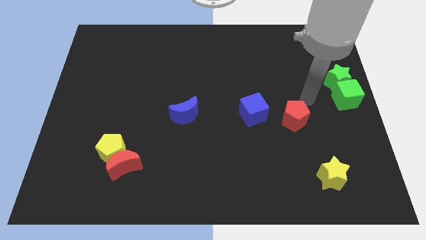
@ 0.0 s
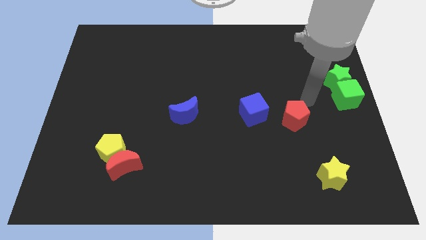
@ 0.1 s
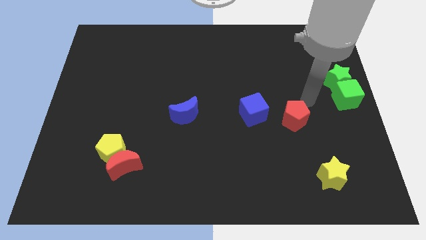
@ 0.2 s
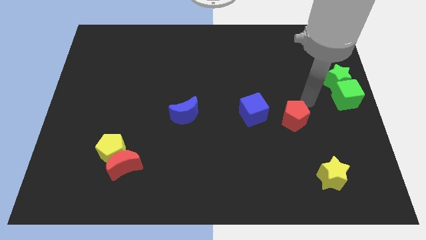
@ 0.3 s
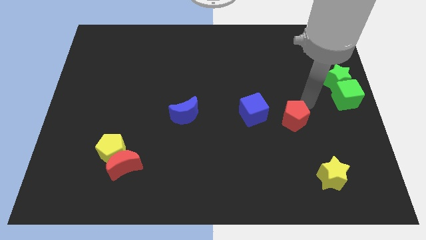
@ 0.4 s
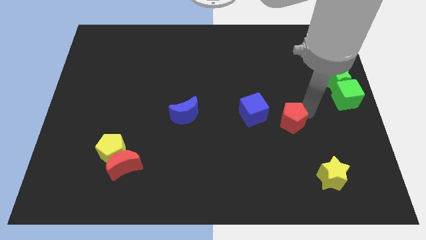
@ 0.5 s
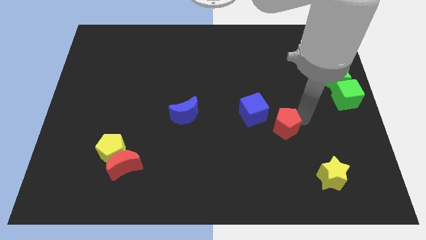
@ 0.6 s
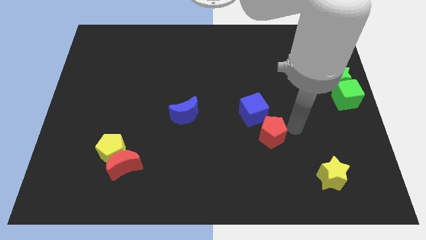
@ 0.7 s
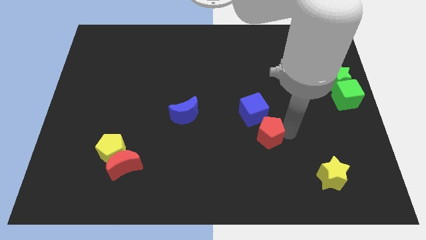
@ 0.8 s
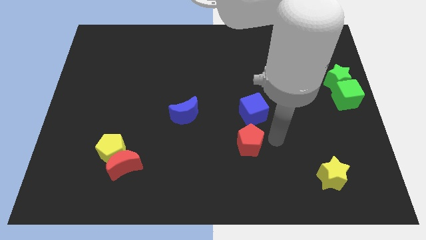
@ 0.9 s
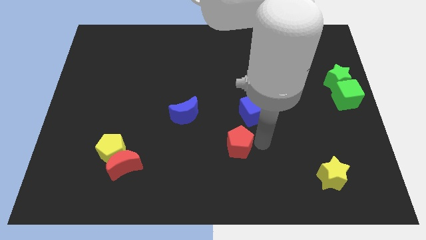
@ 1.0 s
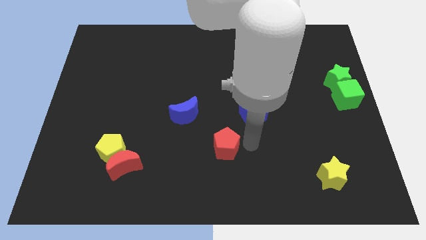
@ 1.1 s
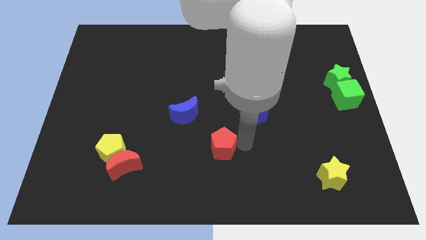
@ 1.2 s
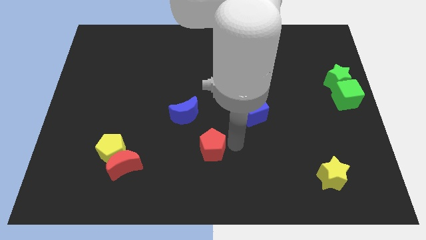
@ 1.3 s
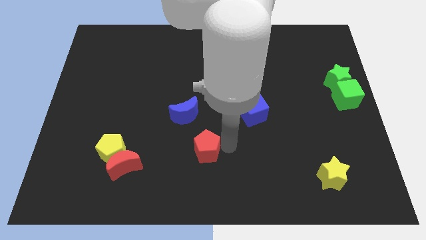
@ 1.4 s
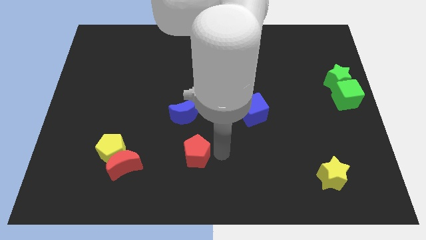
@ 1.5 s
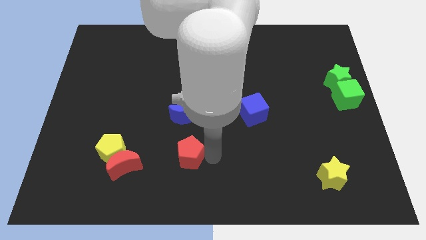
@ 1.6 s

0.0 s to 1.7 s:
move the red pentagon vertical to the blue moon

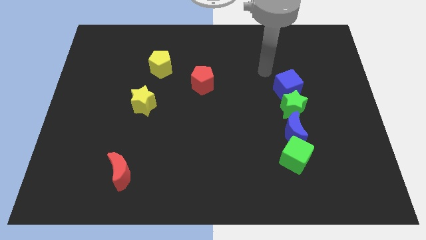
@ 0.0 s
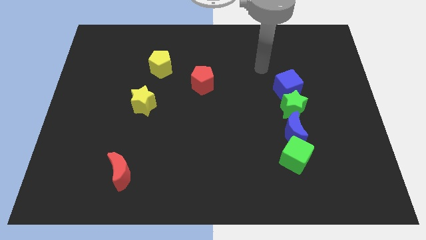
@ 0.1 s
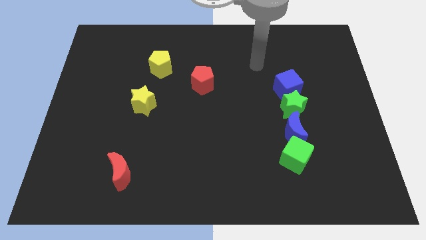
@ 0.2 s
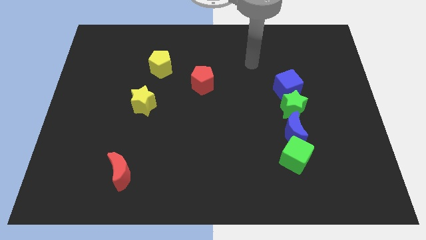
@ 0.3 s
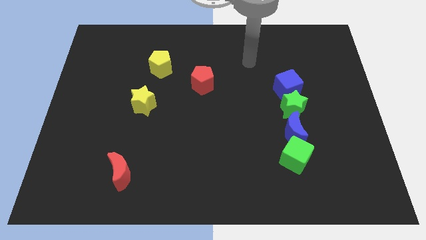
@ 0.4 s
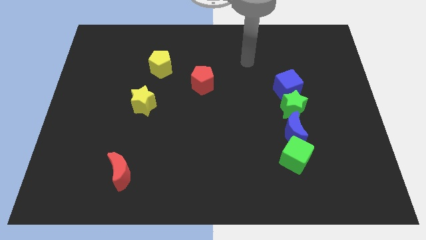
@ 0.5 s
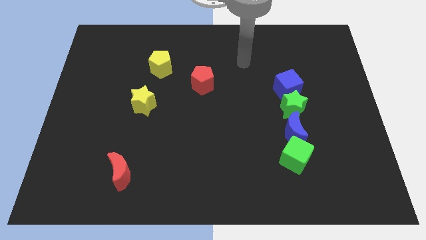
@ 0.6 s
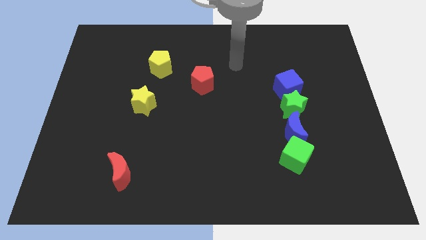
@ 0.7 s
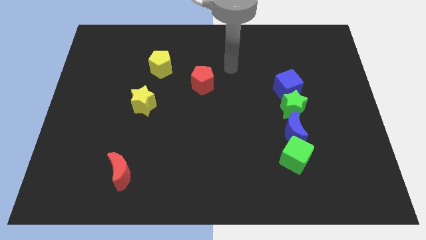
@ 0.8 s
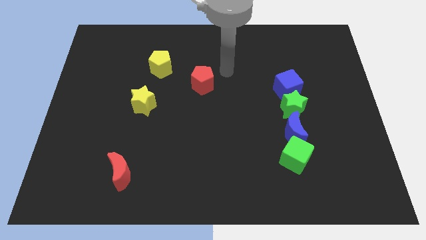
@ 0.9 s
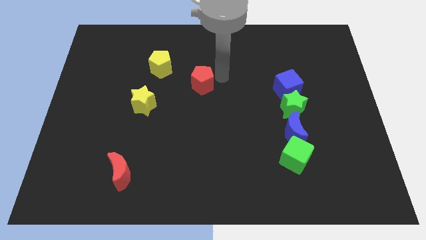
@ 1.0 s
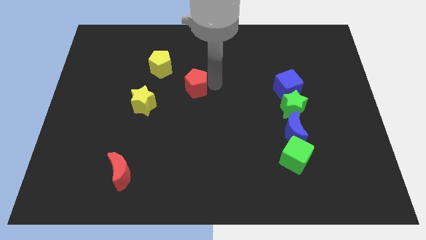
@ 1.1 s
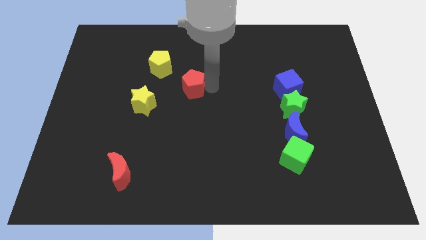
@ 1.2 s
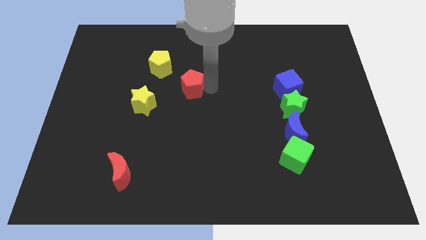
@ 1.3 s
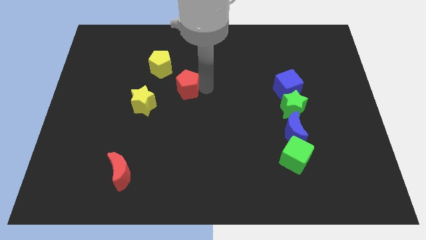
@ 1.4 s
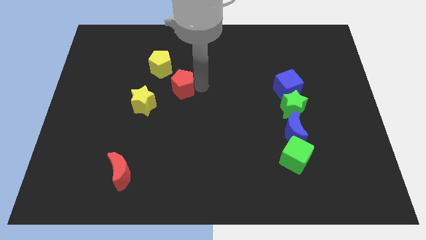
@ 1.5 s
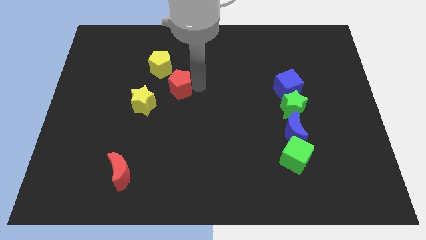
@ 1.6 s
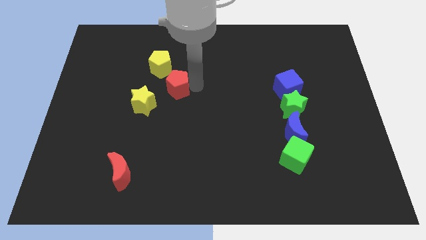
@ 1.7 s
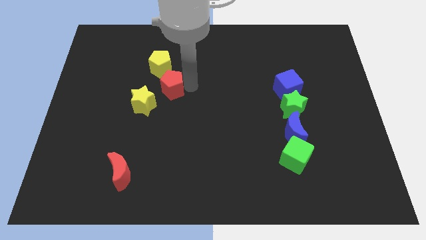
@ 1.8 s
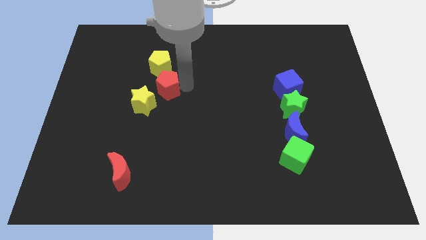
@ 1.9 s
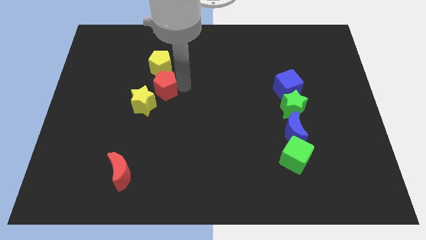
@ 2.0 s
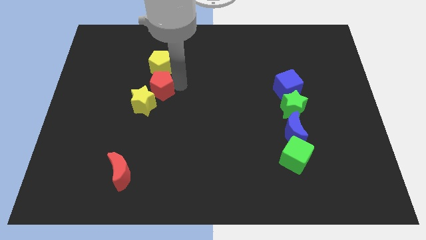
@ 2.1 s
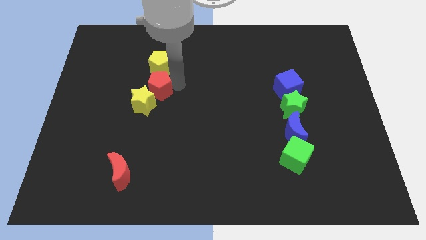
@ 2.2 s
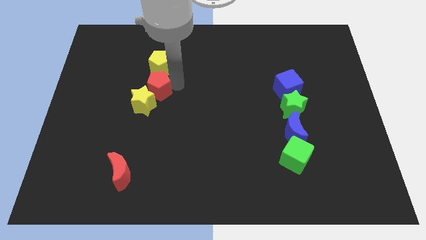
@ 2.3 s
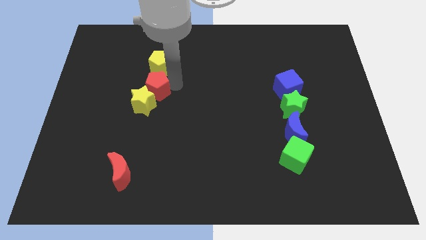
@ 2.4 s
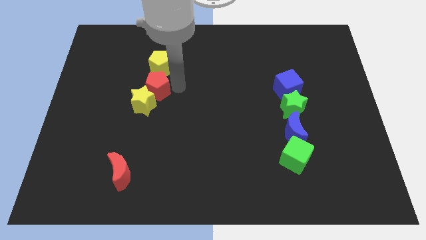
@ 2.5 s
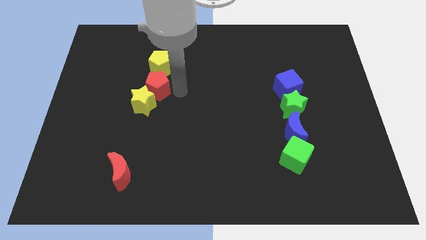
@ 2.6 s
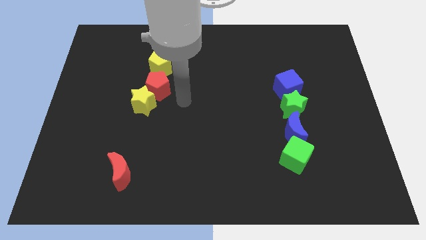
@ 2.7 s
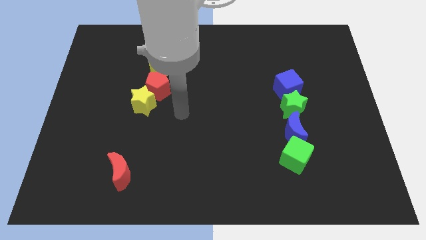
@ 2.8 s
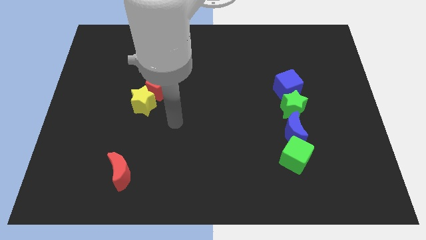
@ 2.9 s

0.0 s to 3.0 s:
move red pentagon in between the yellow blocks

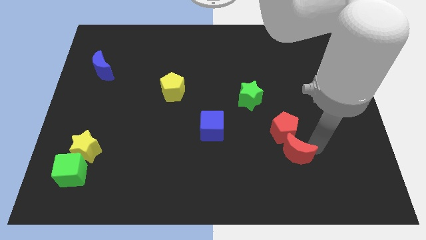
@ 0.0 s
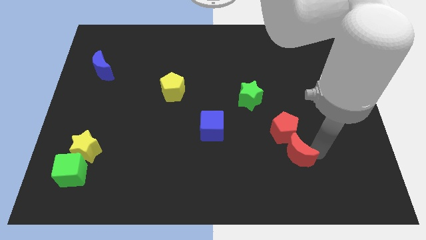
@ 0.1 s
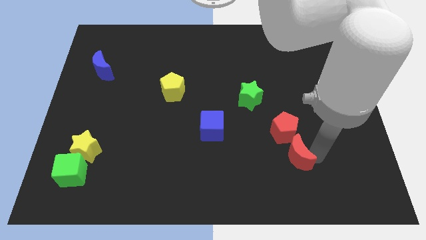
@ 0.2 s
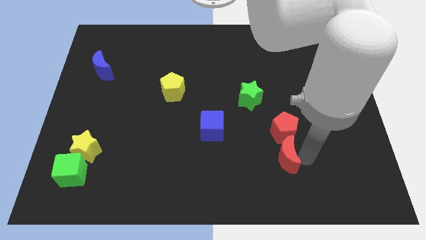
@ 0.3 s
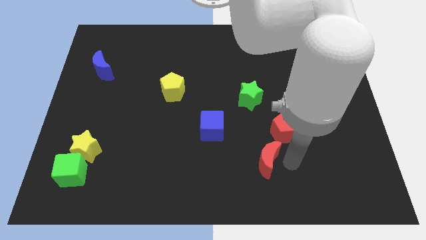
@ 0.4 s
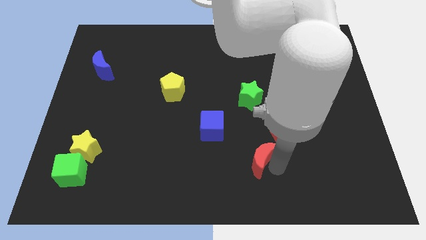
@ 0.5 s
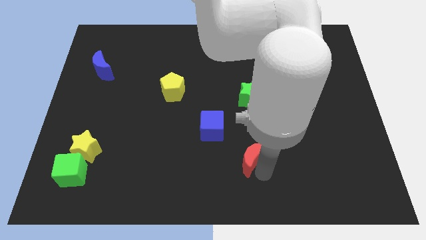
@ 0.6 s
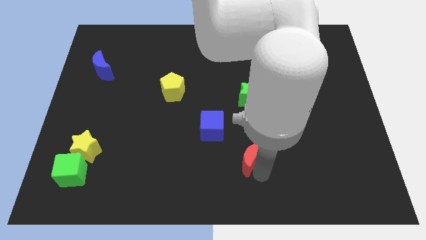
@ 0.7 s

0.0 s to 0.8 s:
push red crescent vertically below green star

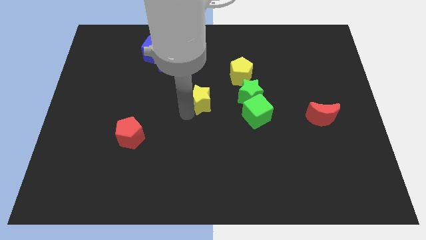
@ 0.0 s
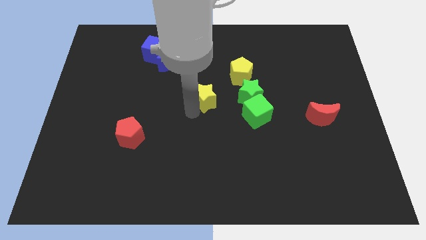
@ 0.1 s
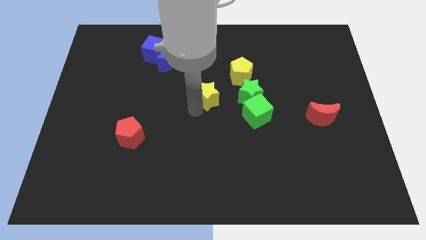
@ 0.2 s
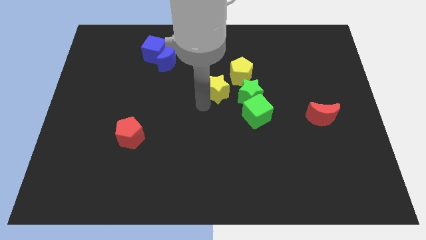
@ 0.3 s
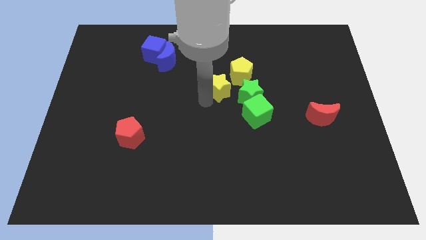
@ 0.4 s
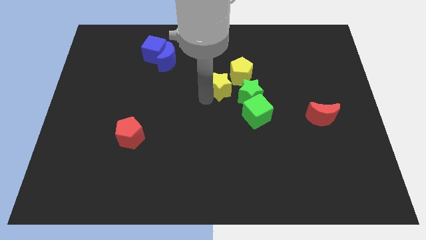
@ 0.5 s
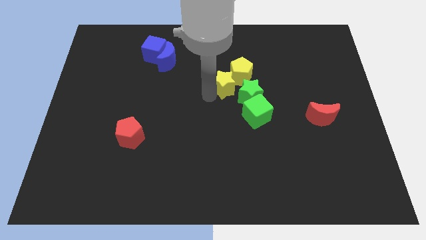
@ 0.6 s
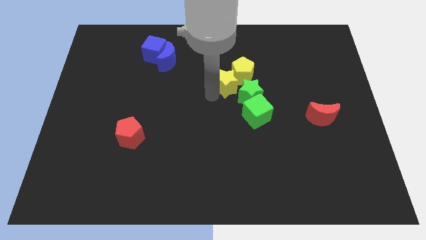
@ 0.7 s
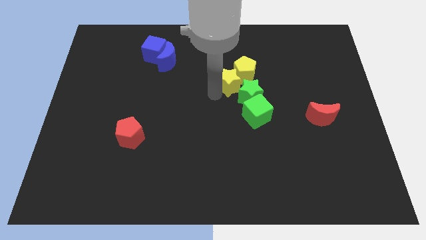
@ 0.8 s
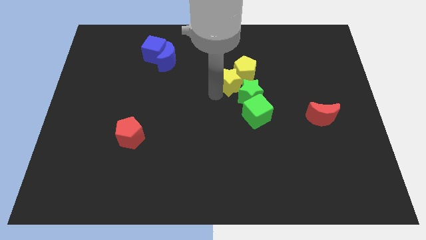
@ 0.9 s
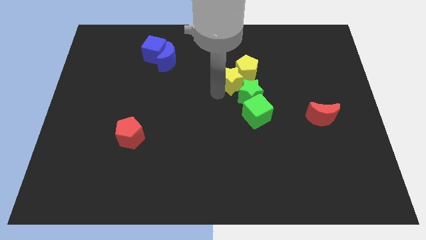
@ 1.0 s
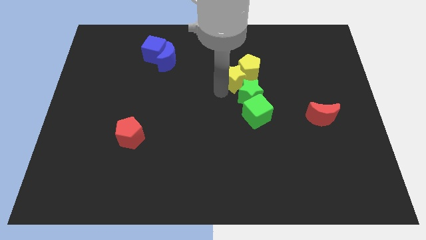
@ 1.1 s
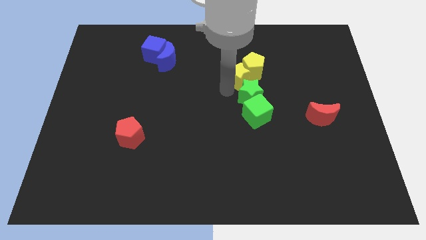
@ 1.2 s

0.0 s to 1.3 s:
push the yellow star into the yellow pentagon

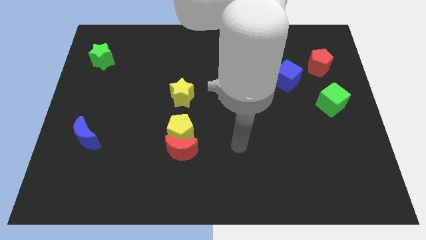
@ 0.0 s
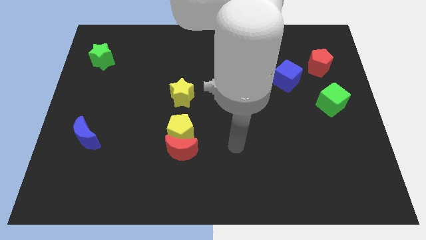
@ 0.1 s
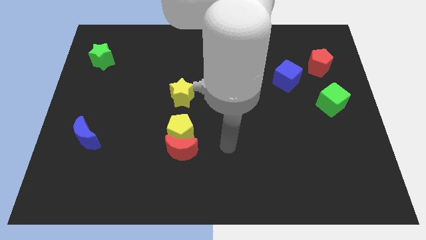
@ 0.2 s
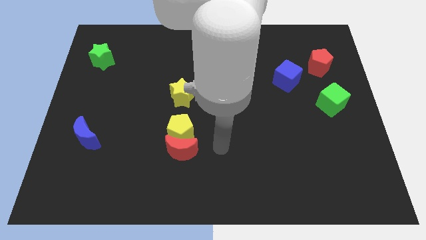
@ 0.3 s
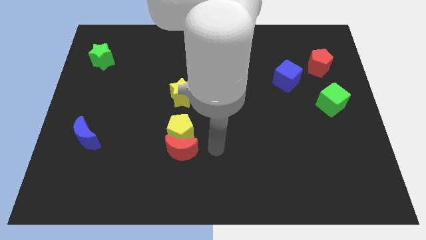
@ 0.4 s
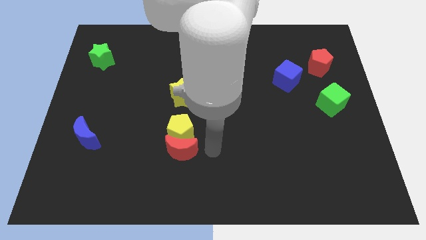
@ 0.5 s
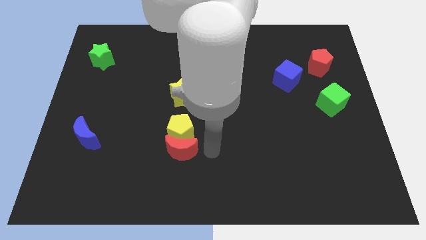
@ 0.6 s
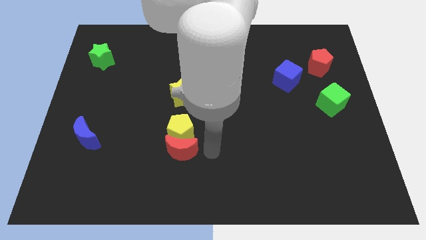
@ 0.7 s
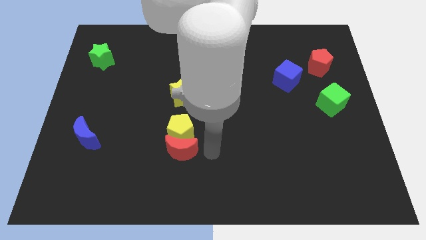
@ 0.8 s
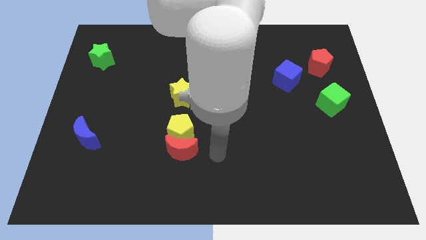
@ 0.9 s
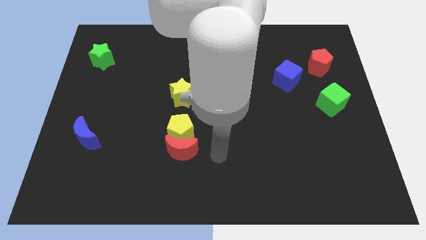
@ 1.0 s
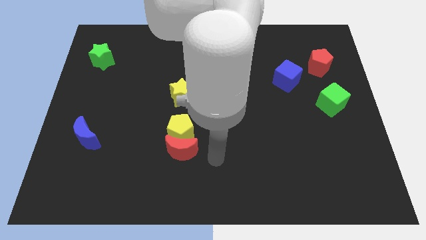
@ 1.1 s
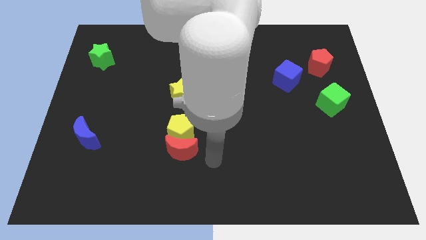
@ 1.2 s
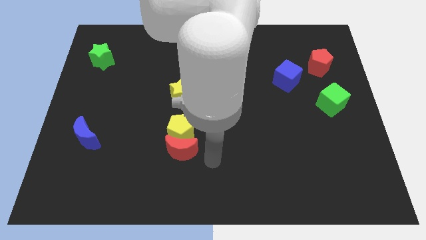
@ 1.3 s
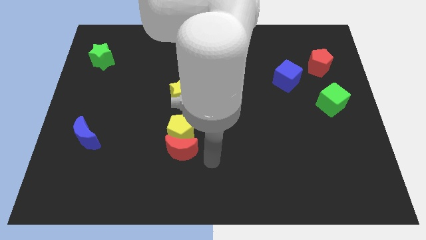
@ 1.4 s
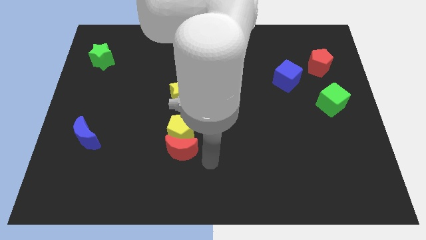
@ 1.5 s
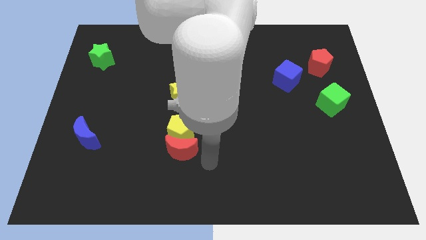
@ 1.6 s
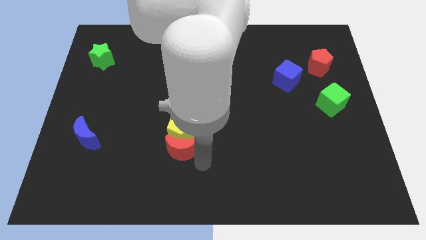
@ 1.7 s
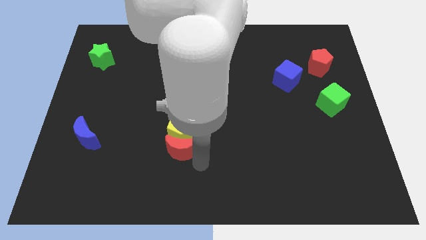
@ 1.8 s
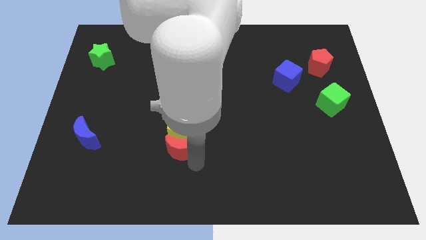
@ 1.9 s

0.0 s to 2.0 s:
point your arm at the bottom right side of red moon

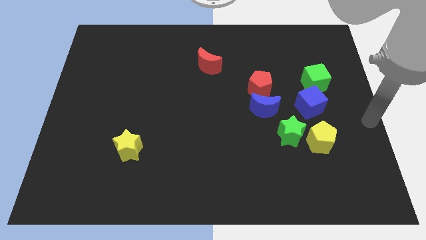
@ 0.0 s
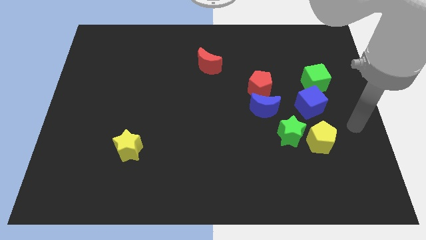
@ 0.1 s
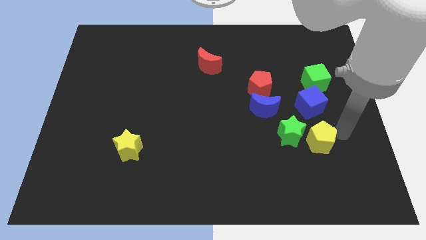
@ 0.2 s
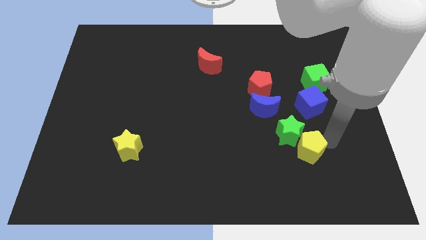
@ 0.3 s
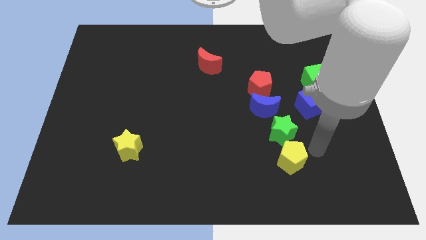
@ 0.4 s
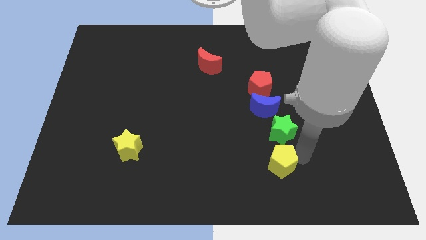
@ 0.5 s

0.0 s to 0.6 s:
place the yellow pentagon below the green star
